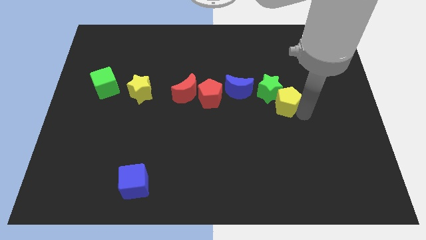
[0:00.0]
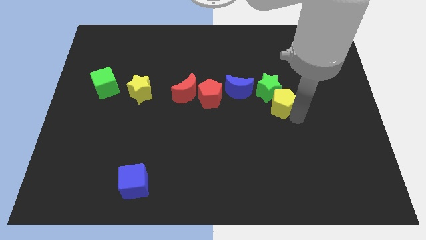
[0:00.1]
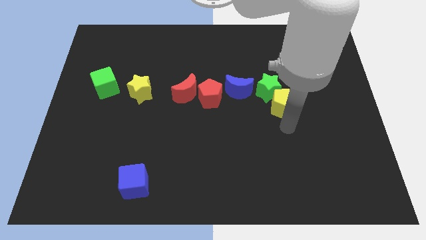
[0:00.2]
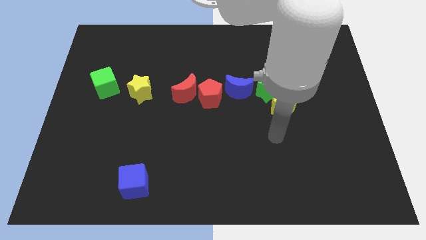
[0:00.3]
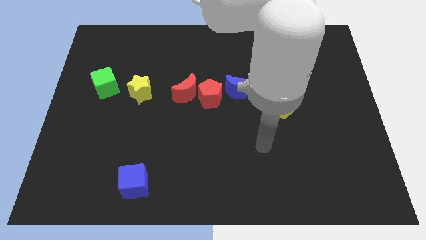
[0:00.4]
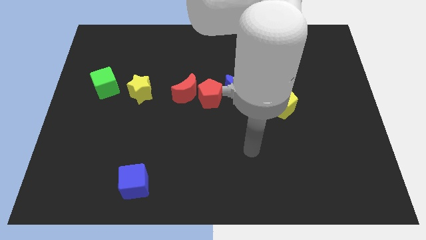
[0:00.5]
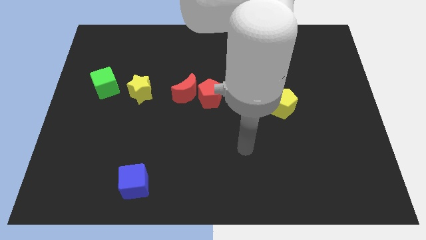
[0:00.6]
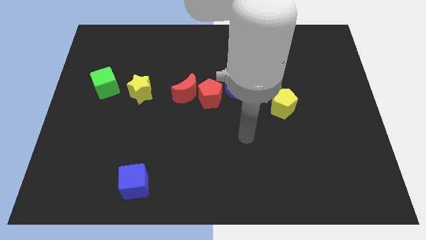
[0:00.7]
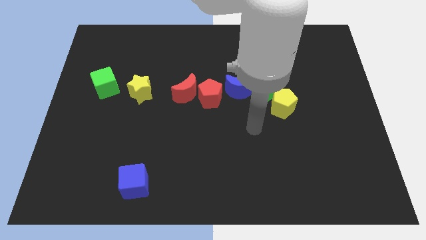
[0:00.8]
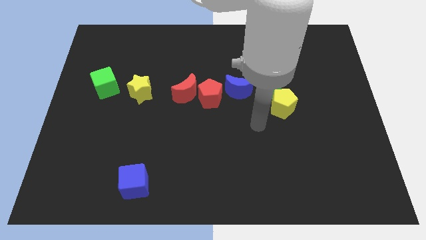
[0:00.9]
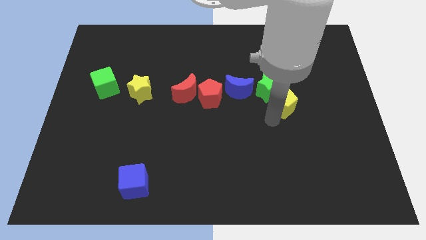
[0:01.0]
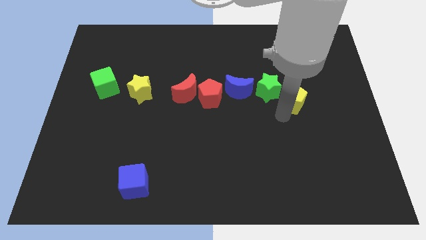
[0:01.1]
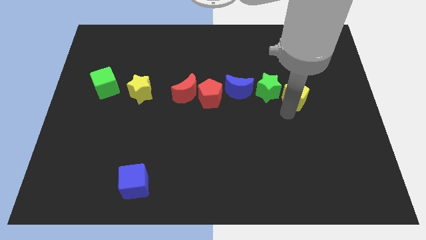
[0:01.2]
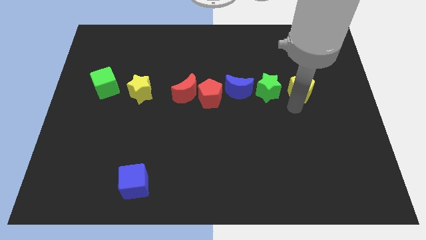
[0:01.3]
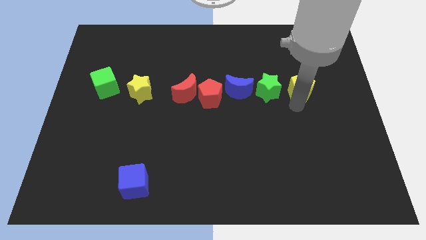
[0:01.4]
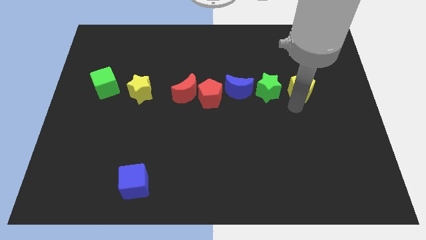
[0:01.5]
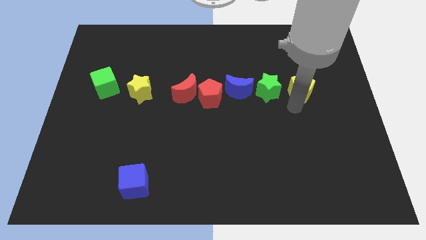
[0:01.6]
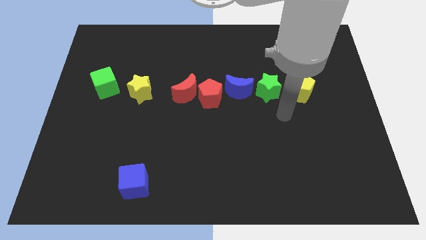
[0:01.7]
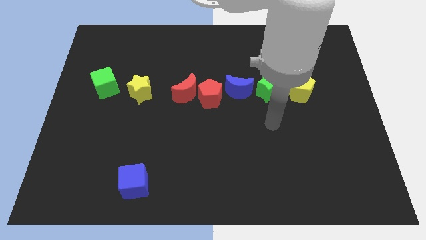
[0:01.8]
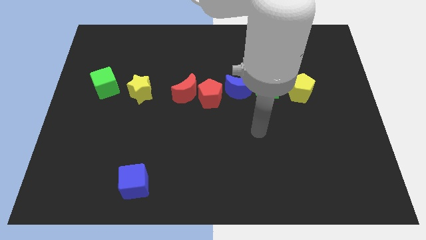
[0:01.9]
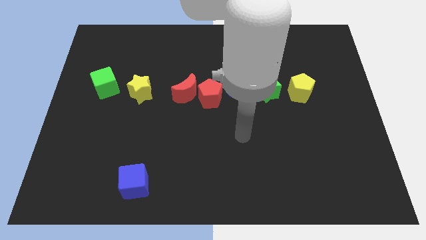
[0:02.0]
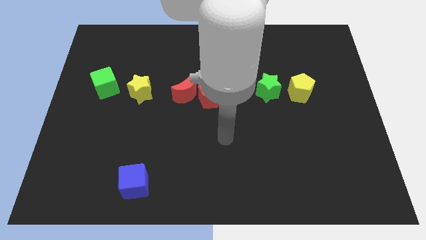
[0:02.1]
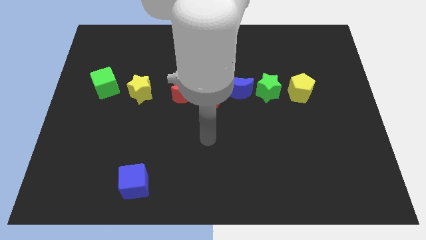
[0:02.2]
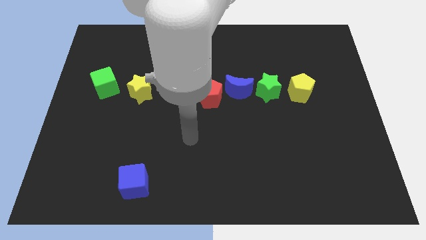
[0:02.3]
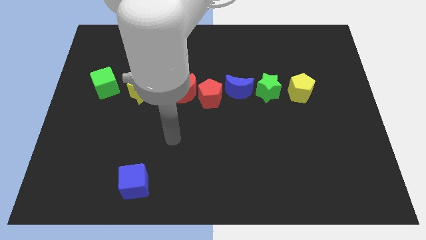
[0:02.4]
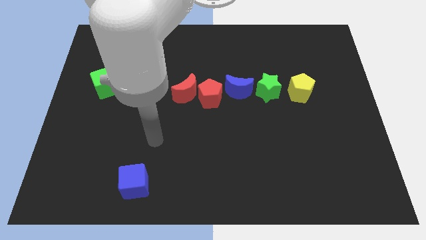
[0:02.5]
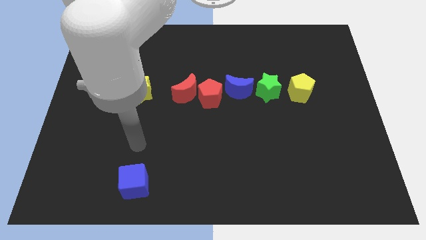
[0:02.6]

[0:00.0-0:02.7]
place the yellow pentagon to the right of the green star

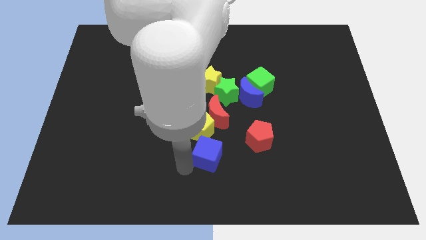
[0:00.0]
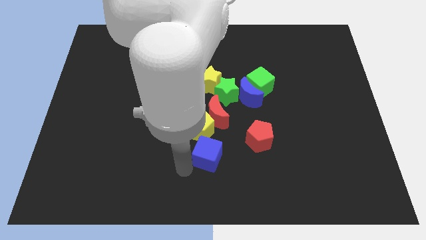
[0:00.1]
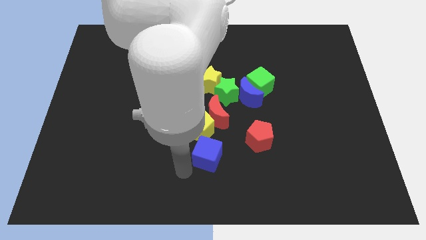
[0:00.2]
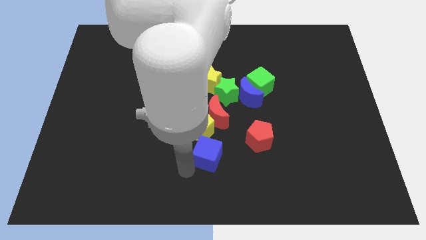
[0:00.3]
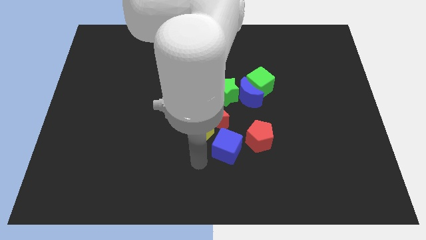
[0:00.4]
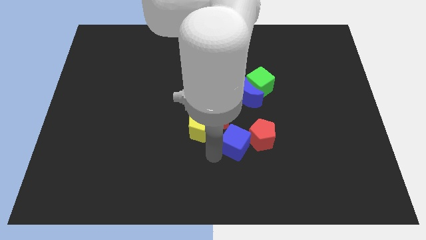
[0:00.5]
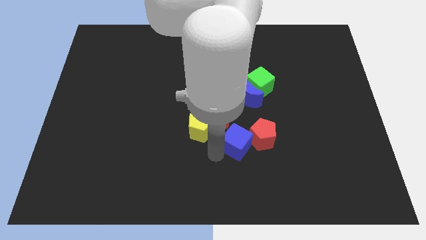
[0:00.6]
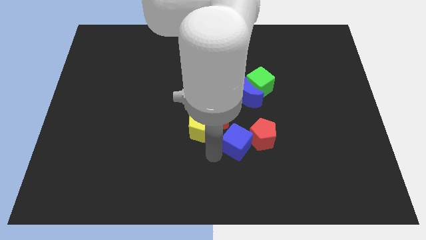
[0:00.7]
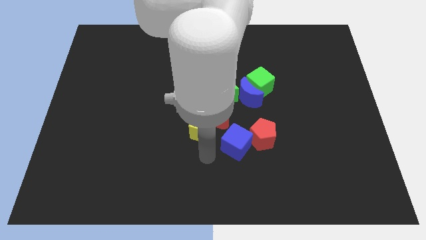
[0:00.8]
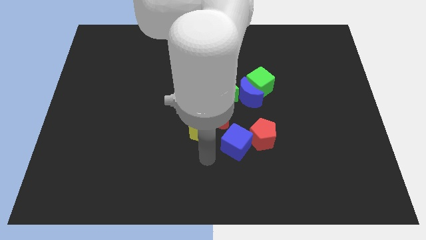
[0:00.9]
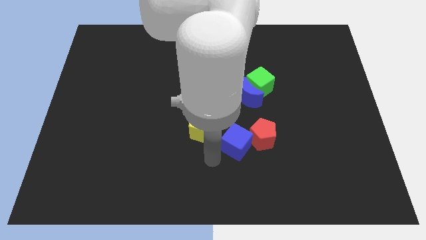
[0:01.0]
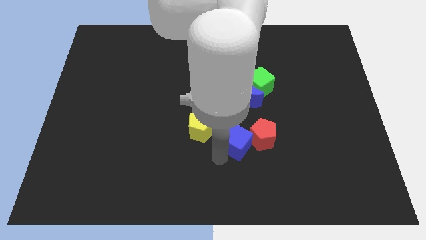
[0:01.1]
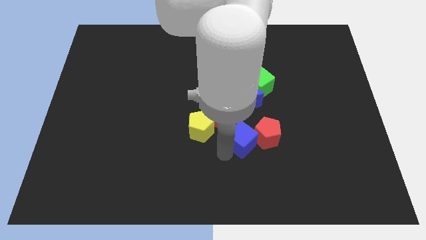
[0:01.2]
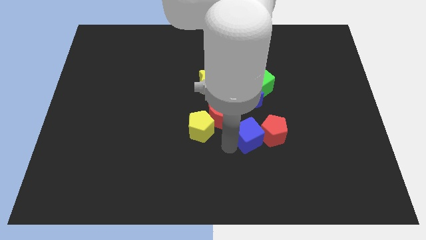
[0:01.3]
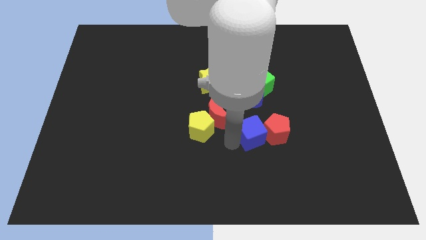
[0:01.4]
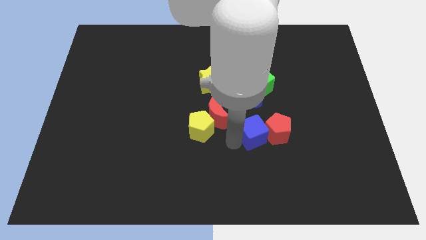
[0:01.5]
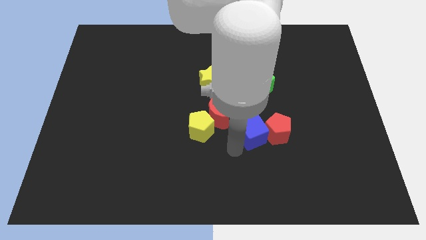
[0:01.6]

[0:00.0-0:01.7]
drag the blue cube into the left side of the red pentagon

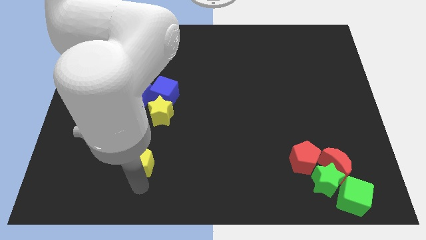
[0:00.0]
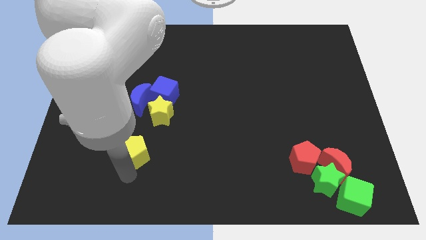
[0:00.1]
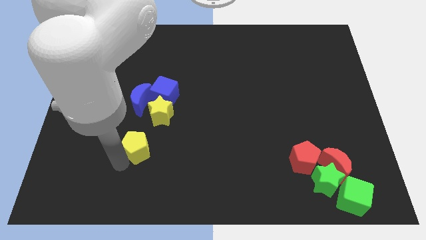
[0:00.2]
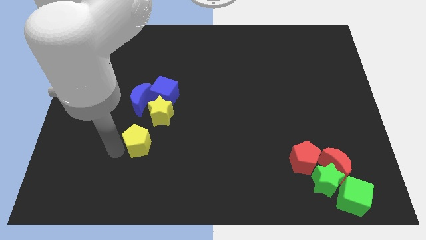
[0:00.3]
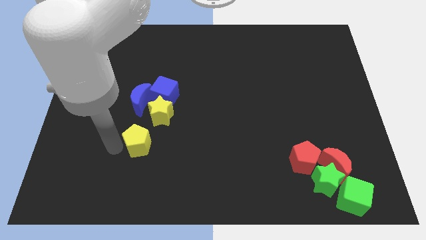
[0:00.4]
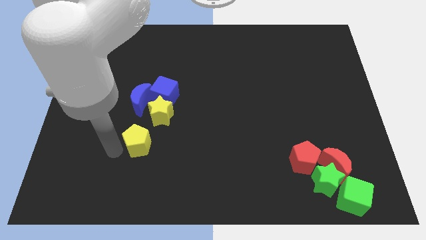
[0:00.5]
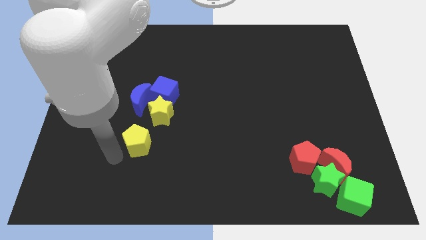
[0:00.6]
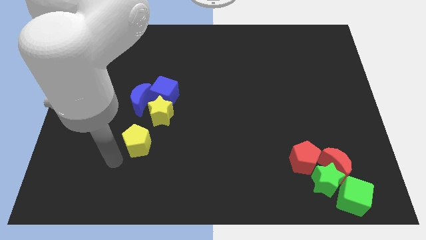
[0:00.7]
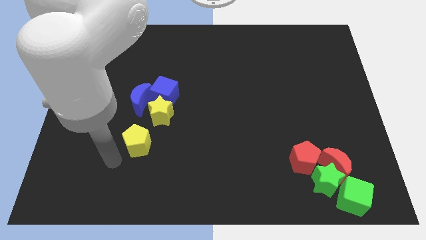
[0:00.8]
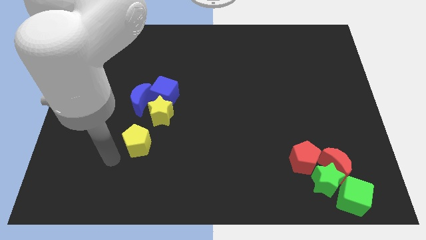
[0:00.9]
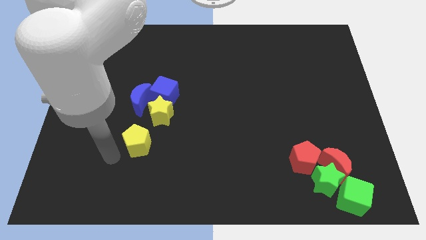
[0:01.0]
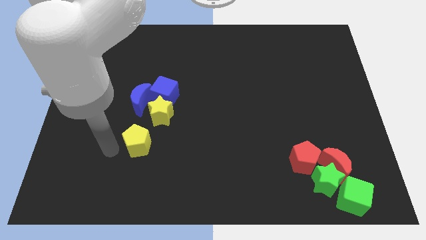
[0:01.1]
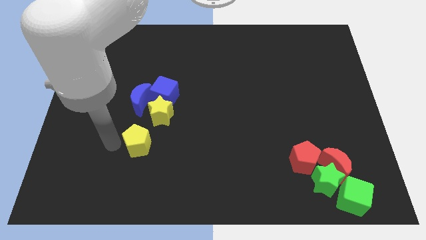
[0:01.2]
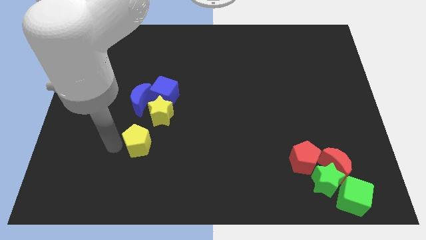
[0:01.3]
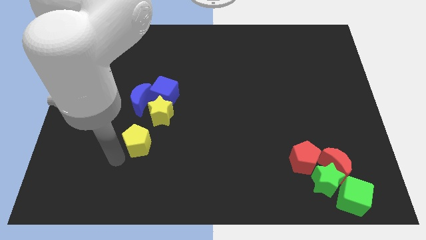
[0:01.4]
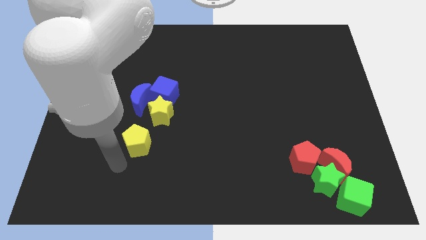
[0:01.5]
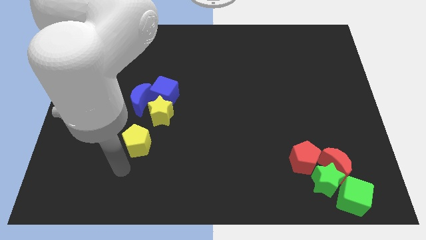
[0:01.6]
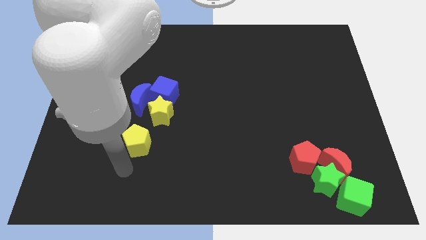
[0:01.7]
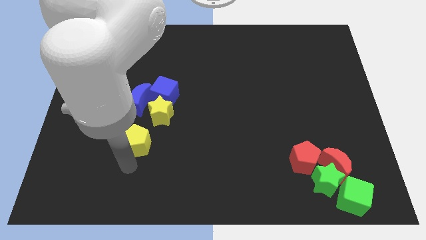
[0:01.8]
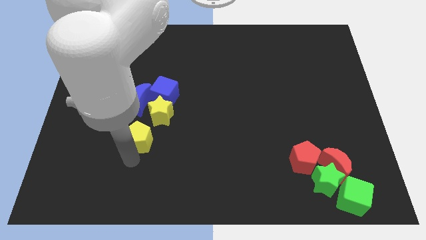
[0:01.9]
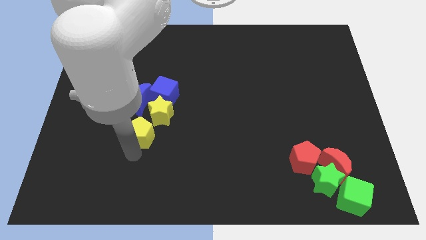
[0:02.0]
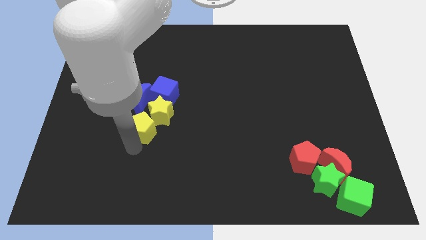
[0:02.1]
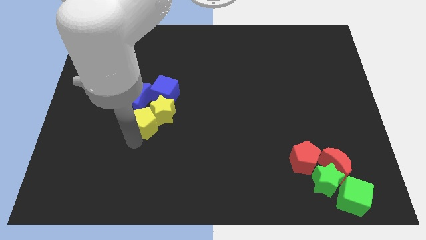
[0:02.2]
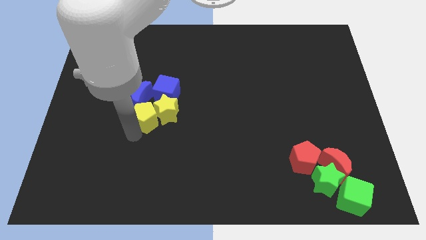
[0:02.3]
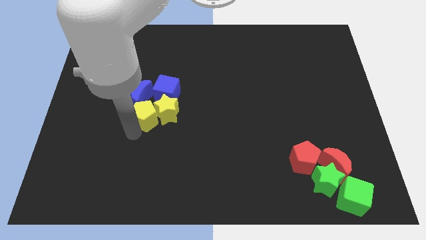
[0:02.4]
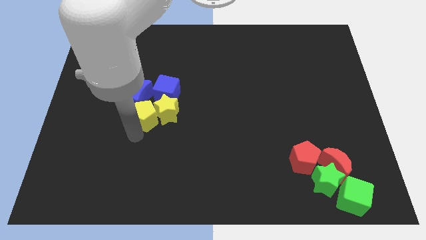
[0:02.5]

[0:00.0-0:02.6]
put the yellow pentagon at the bottom left side of the yellow star

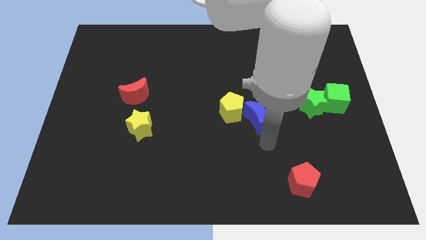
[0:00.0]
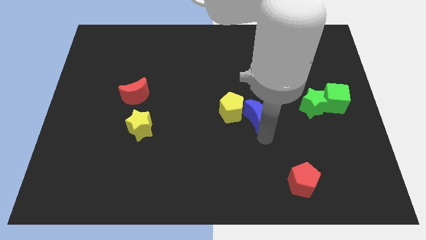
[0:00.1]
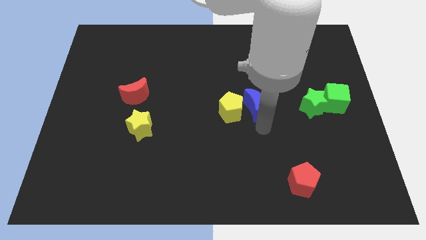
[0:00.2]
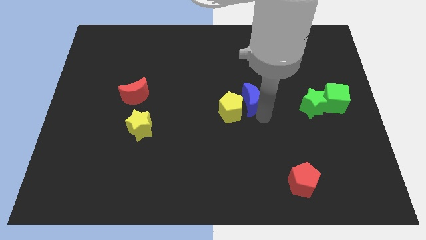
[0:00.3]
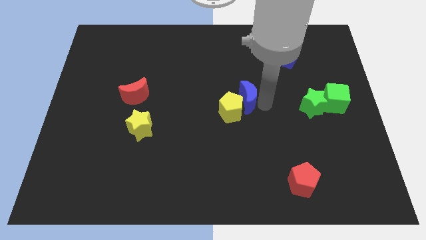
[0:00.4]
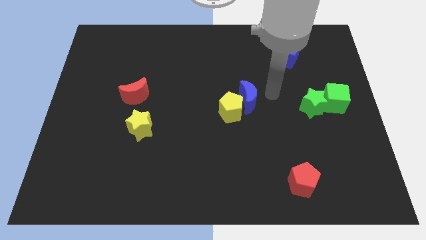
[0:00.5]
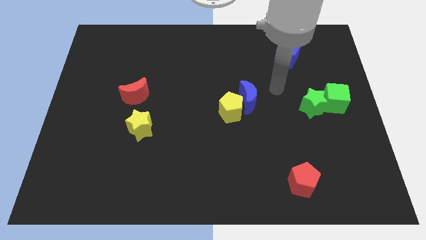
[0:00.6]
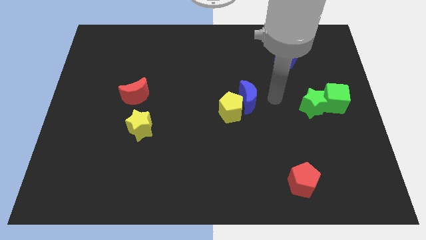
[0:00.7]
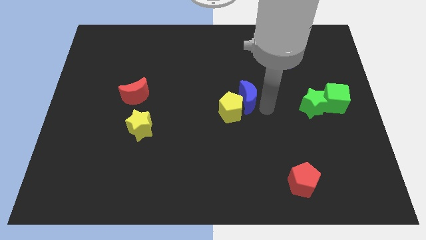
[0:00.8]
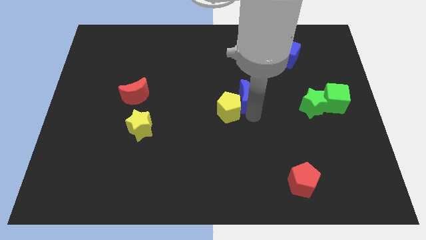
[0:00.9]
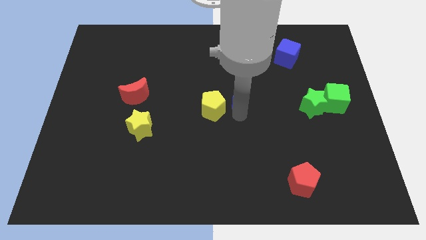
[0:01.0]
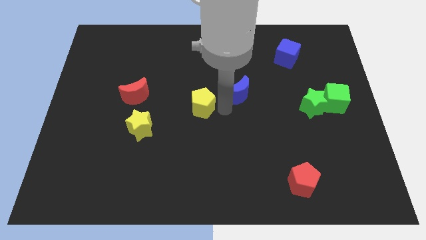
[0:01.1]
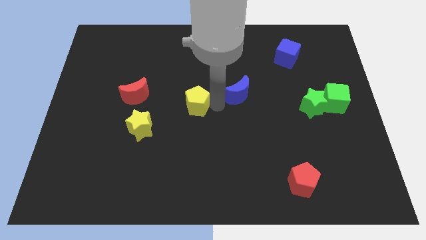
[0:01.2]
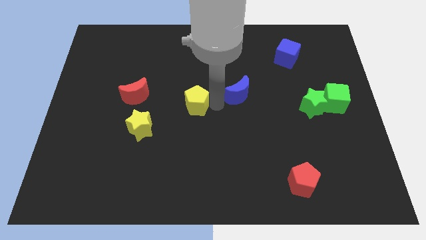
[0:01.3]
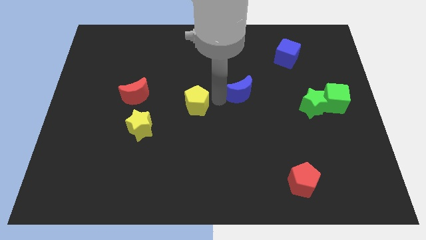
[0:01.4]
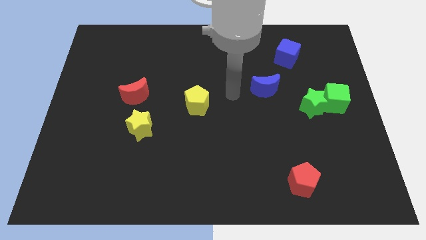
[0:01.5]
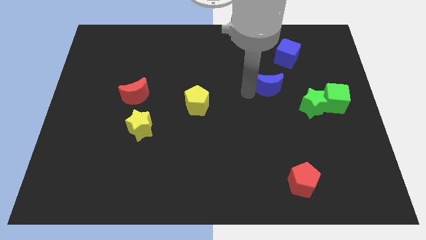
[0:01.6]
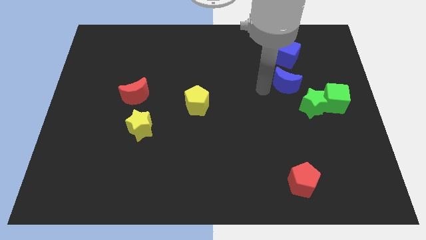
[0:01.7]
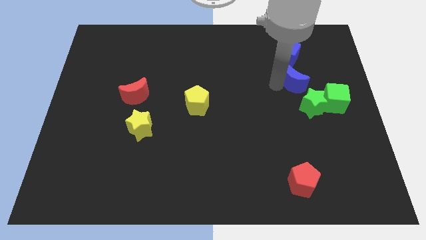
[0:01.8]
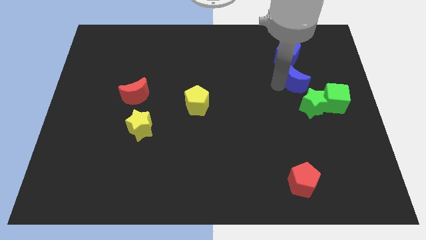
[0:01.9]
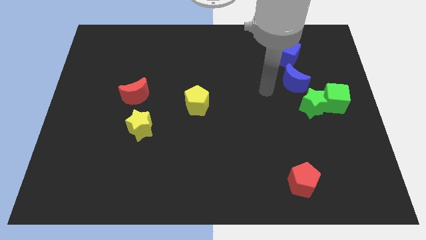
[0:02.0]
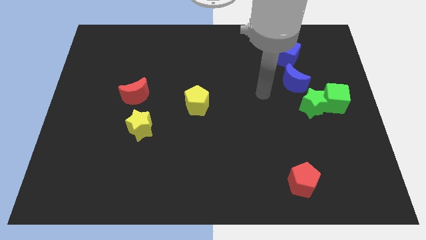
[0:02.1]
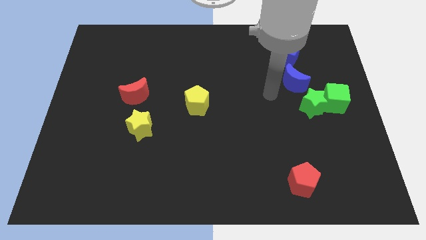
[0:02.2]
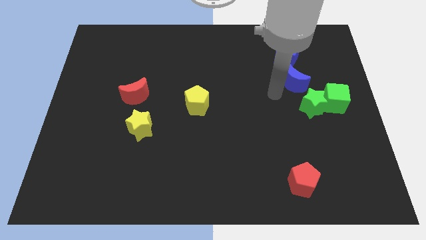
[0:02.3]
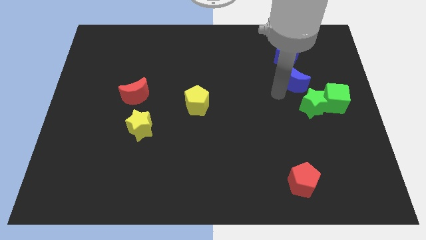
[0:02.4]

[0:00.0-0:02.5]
move the blue crescent to the top of the green star
